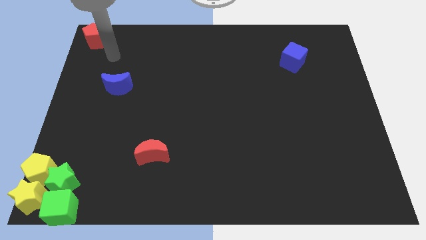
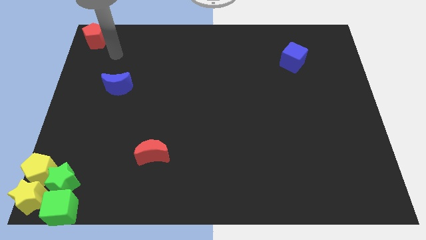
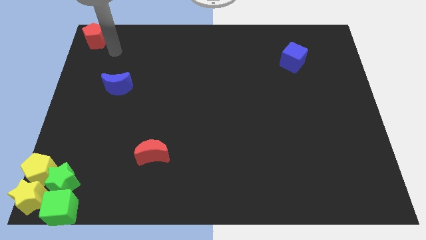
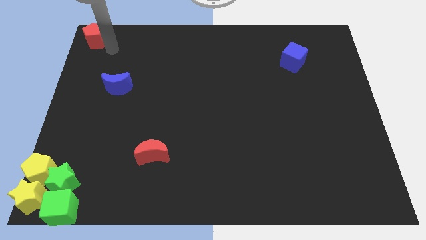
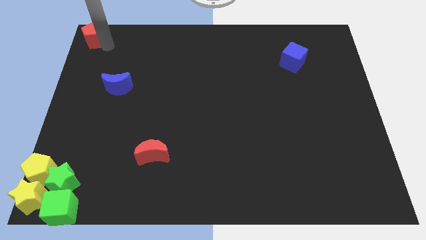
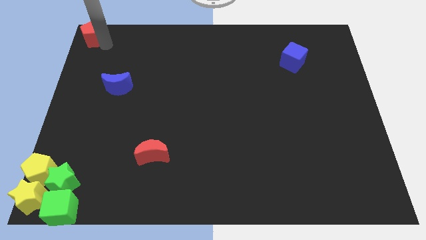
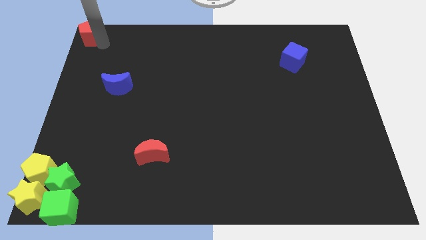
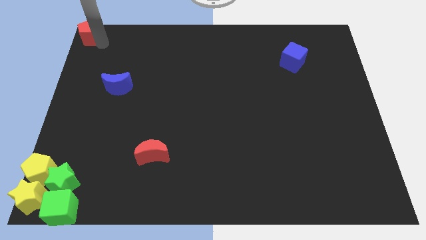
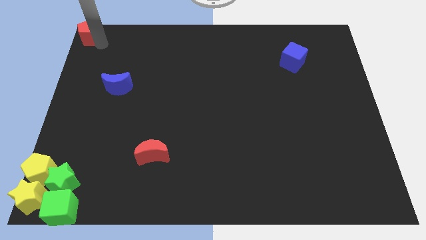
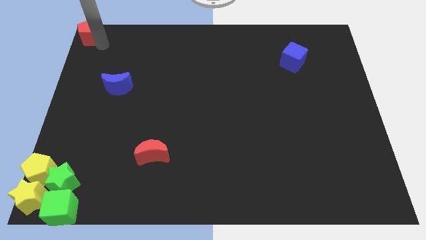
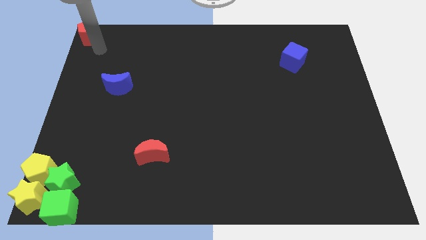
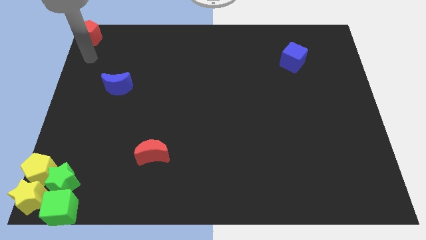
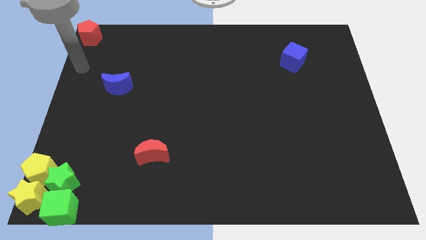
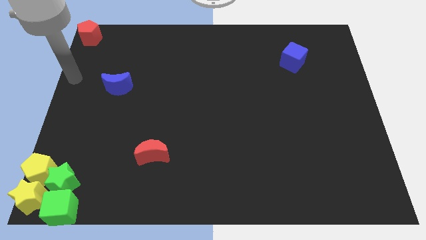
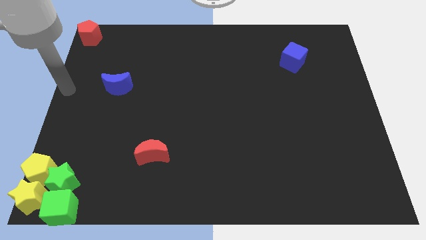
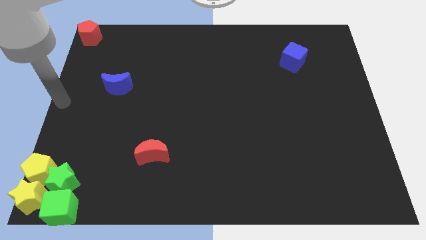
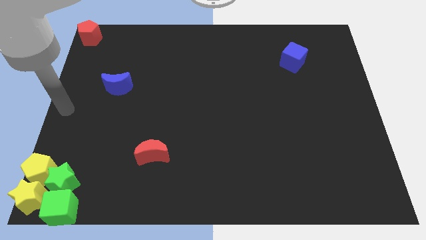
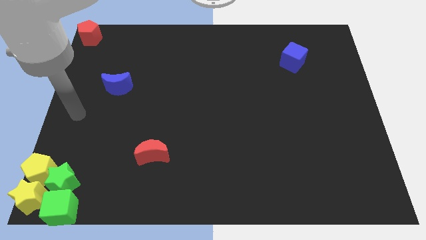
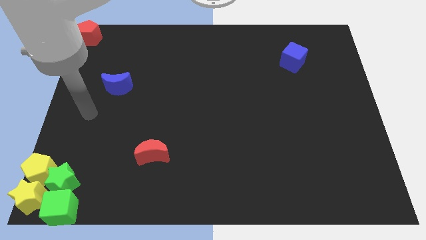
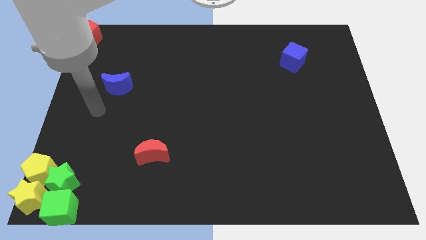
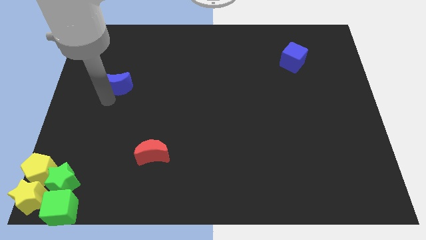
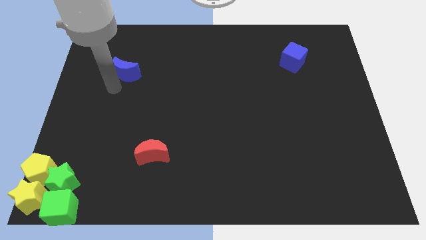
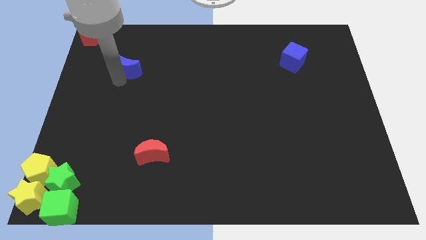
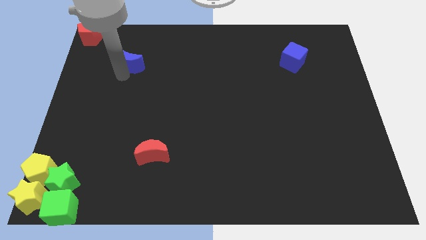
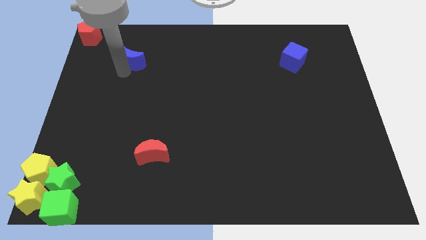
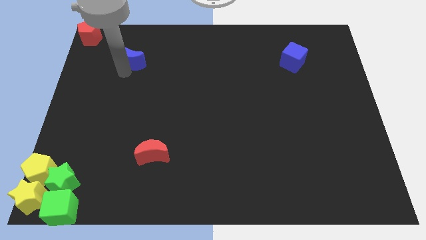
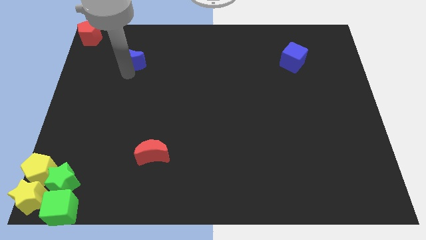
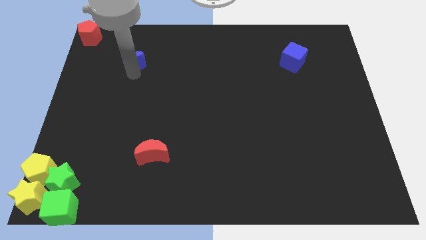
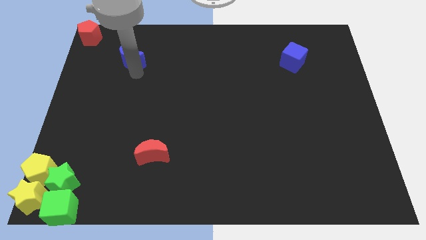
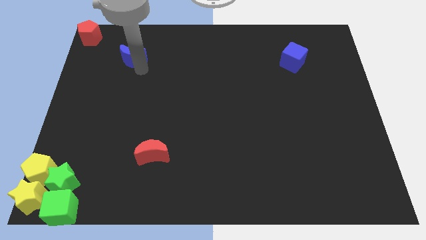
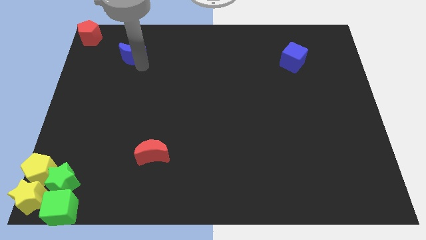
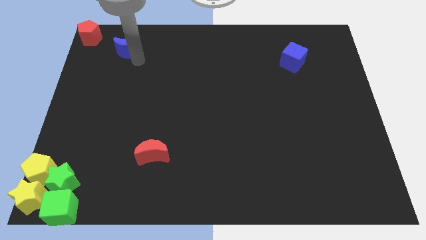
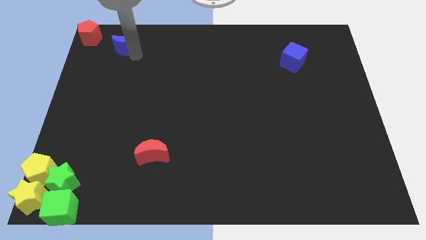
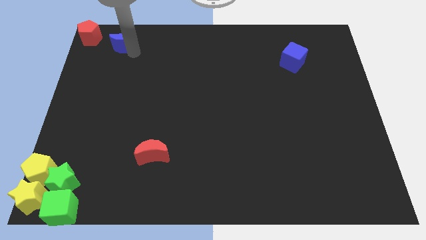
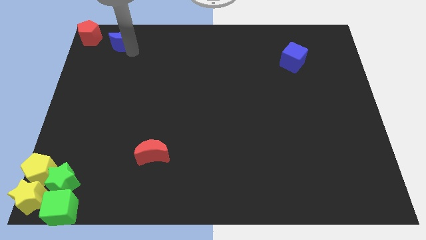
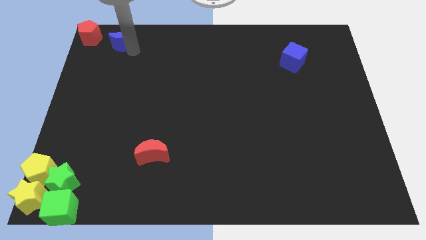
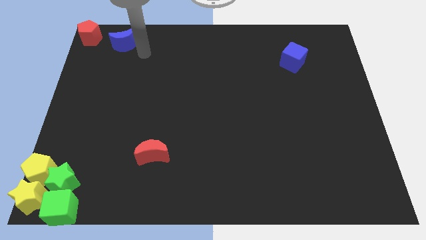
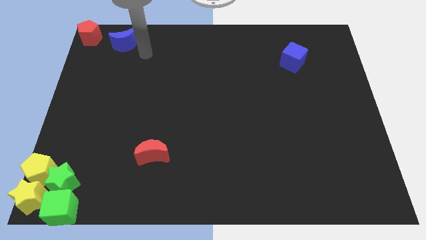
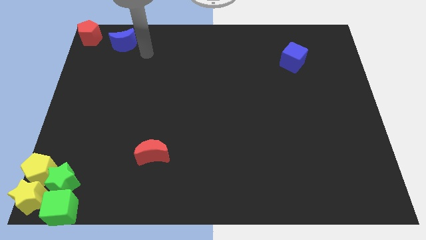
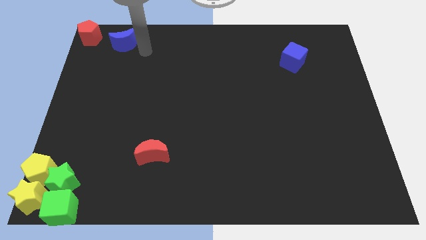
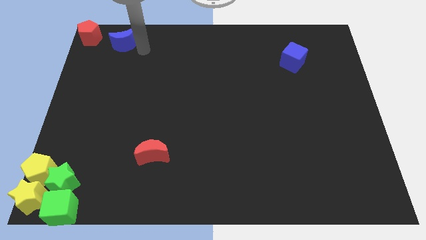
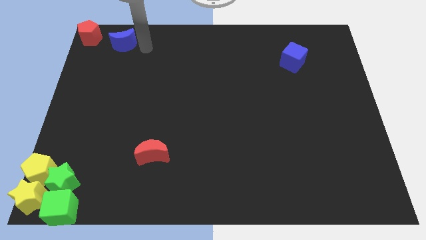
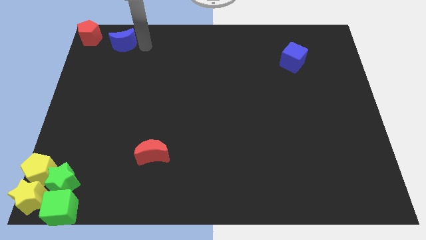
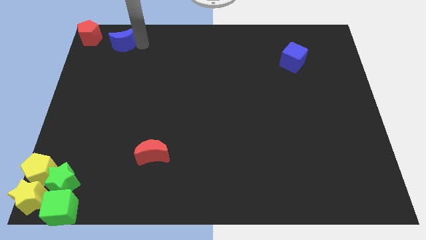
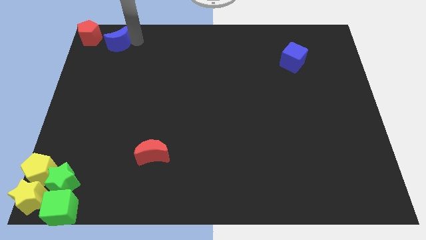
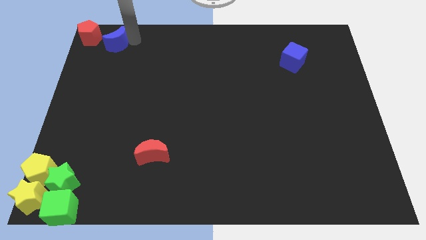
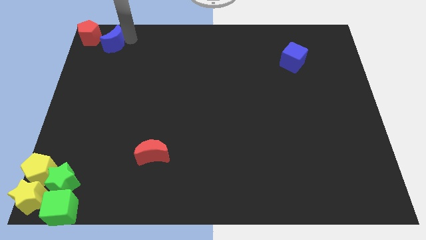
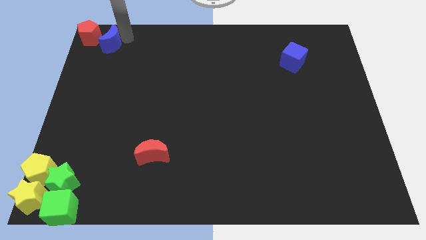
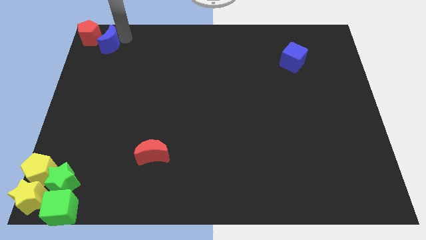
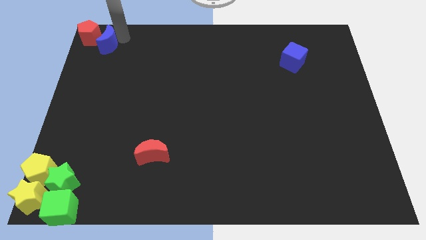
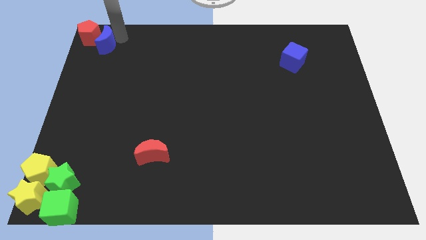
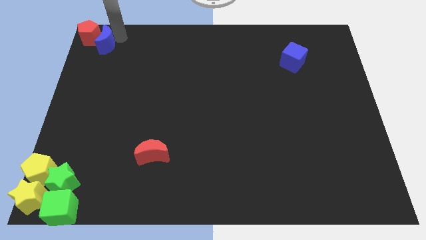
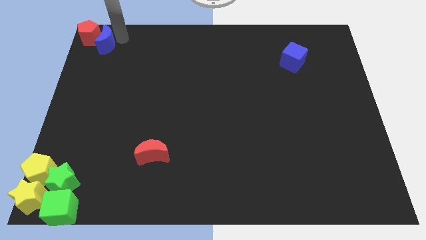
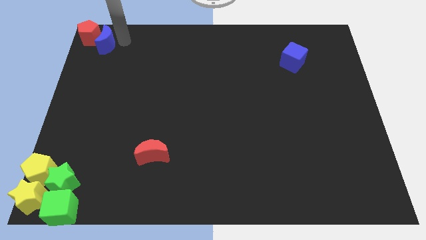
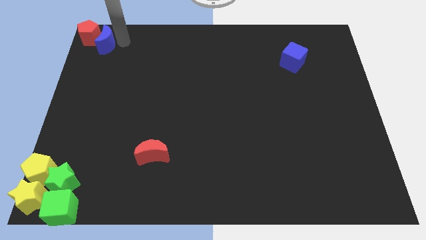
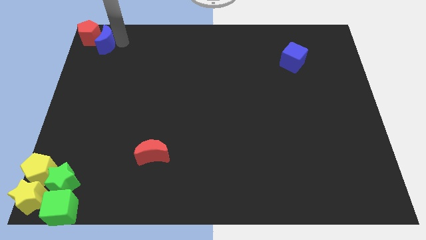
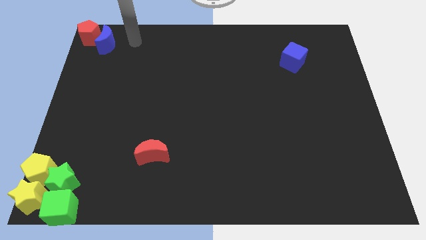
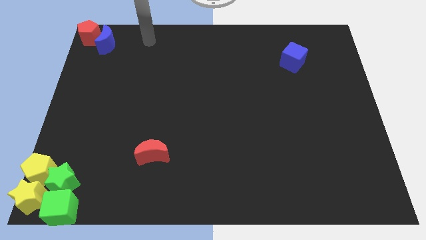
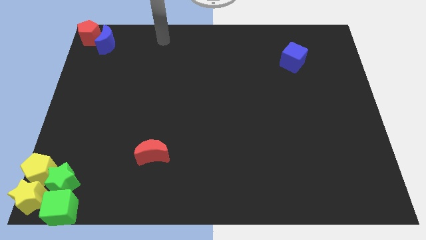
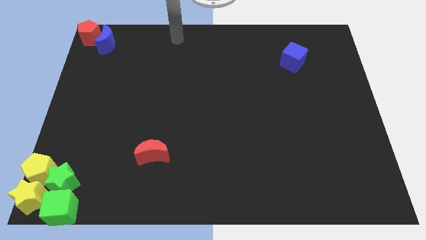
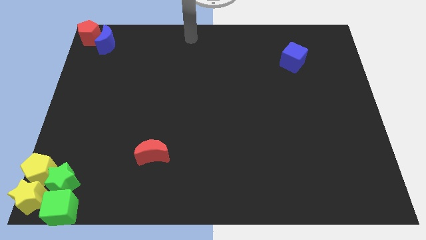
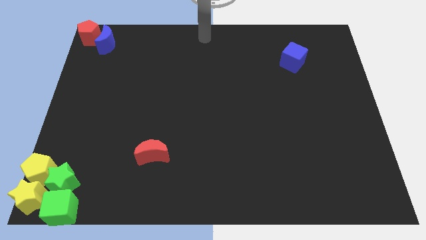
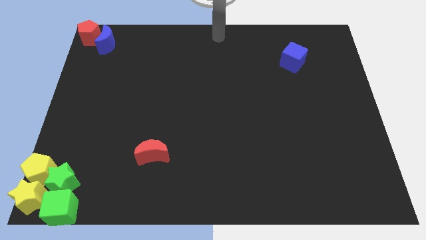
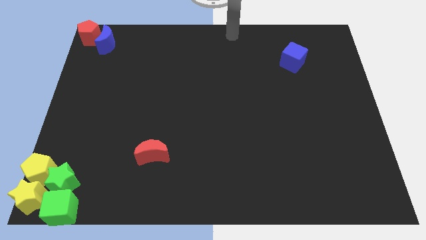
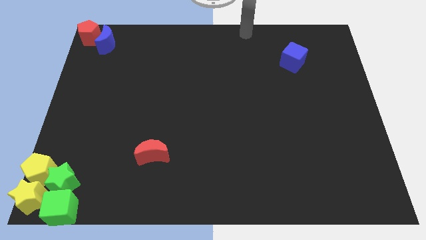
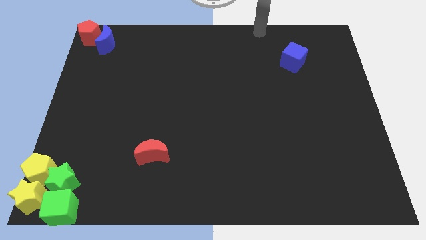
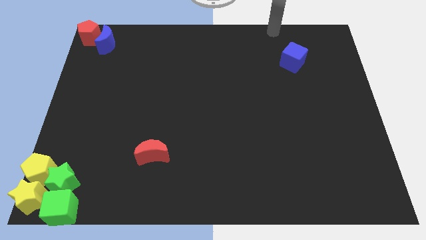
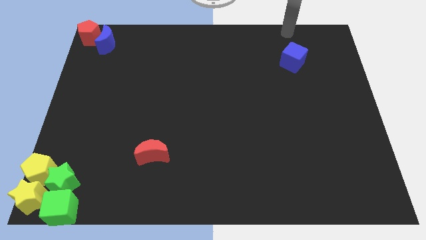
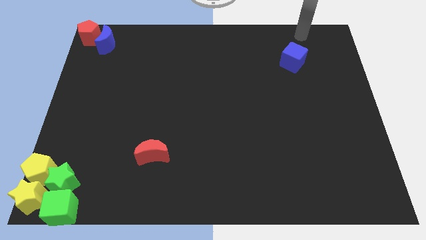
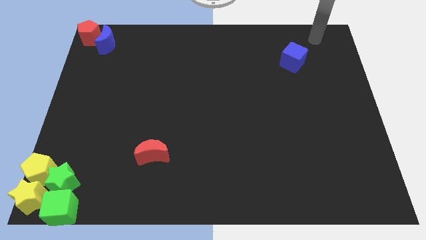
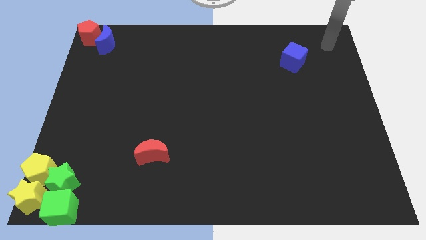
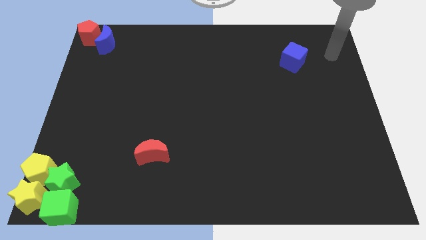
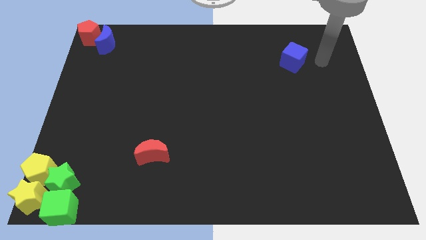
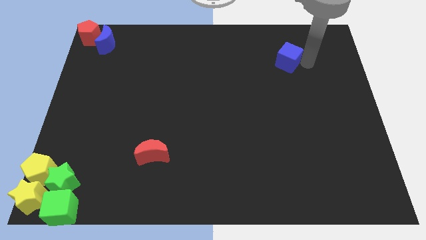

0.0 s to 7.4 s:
move the blue moon to right side of the red pentagon

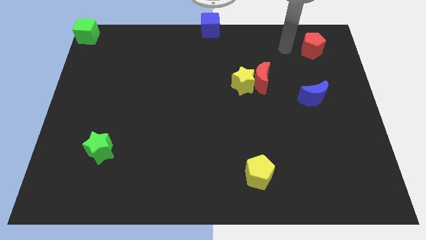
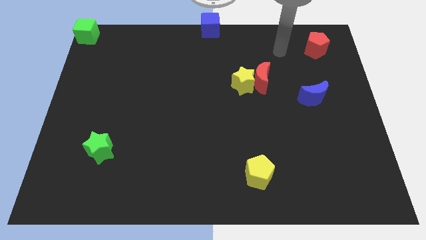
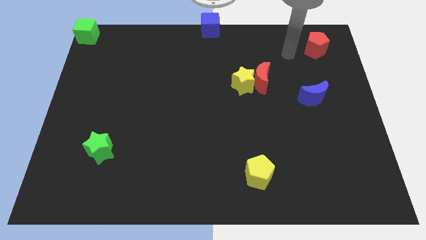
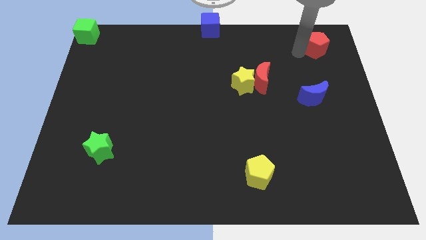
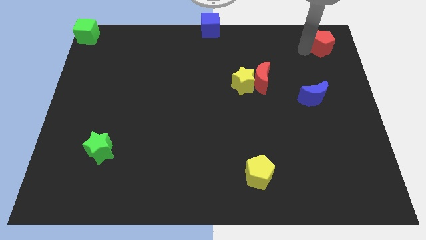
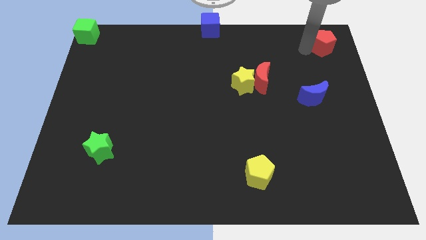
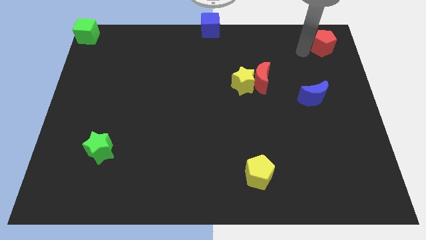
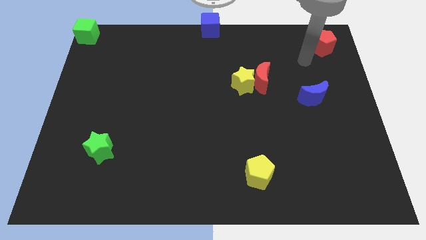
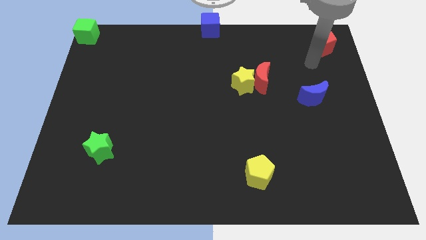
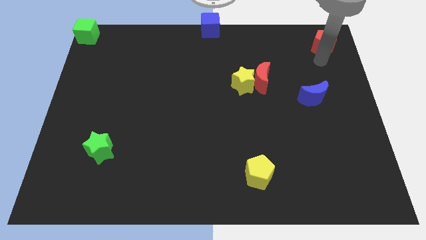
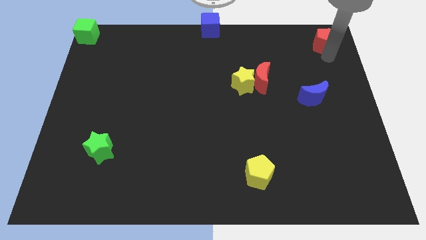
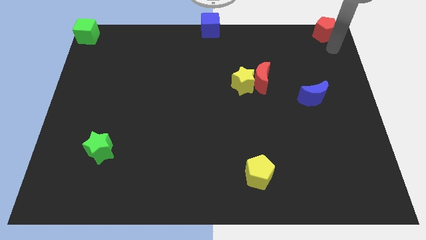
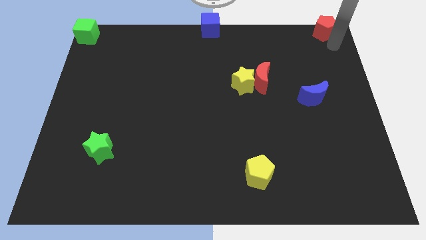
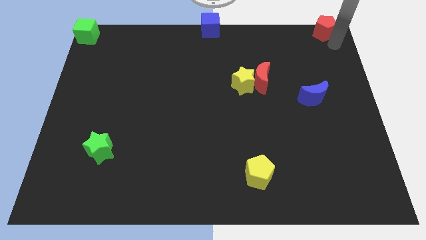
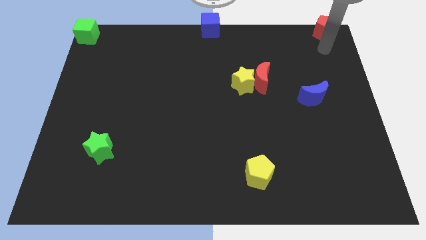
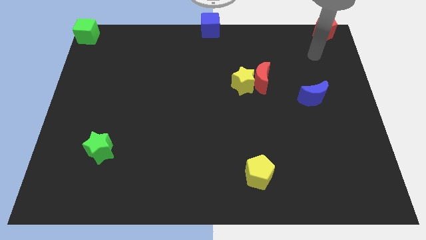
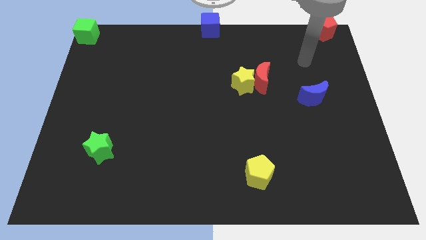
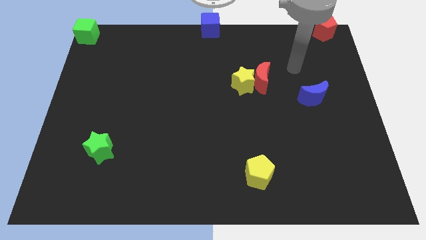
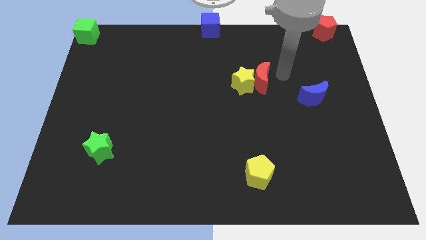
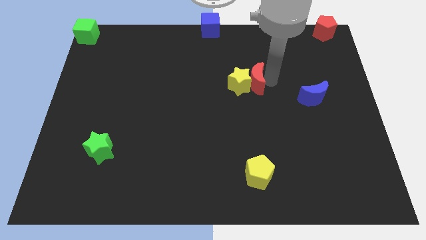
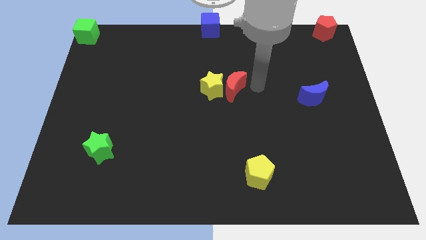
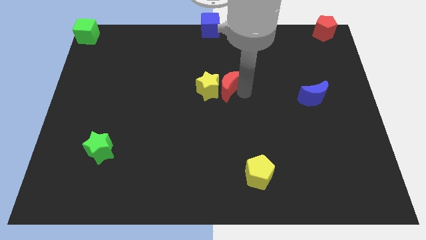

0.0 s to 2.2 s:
move red pentagon towards the right top of the board
